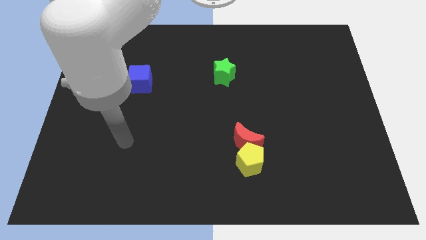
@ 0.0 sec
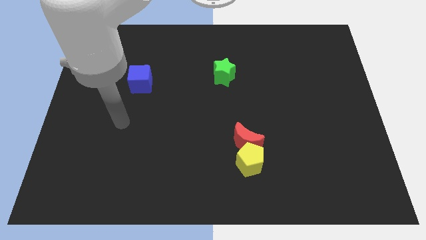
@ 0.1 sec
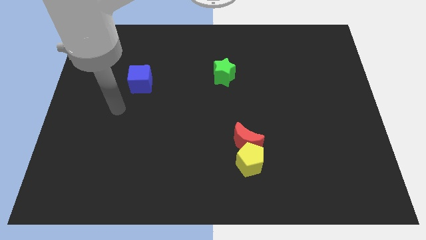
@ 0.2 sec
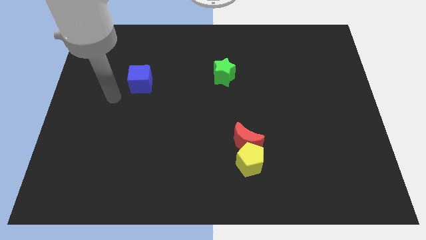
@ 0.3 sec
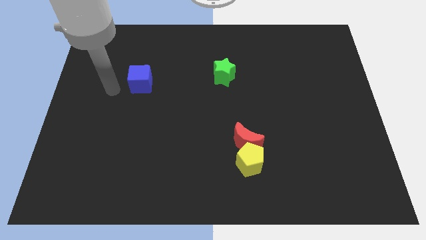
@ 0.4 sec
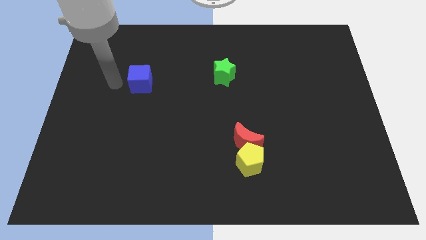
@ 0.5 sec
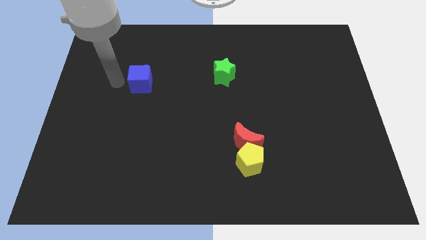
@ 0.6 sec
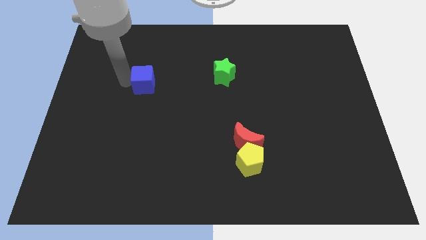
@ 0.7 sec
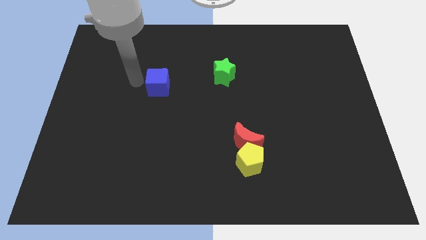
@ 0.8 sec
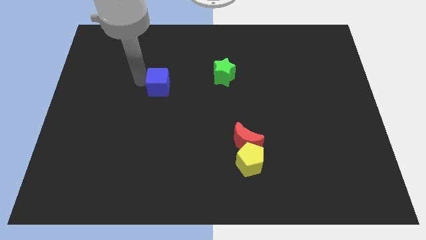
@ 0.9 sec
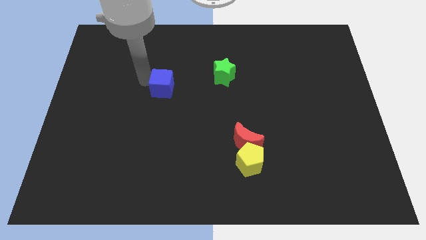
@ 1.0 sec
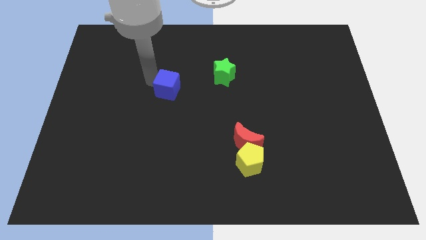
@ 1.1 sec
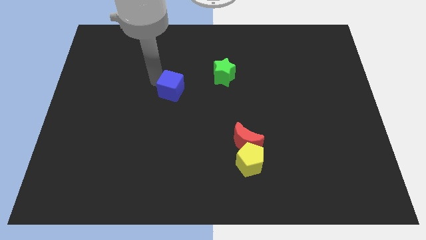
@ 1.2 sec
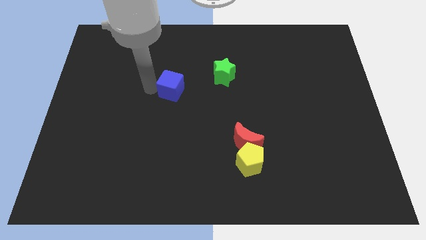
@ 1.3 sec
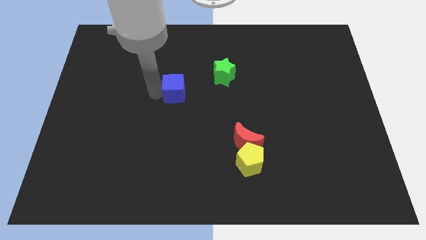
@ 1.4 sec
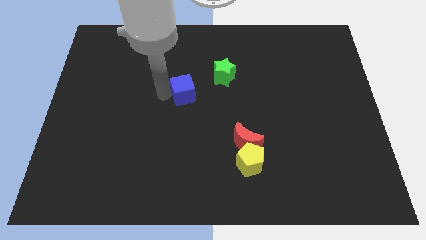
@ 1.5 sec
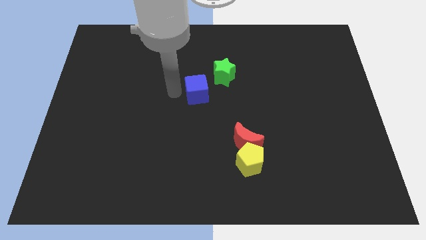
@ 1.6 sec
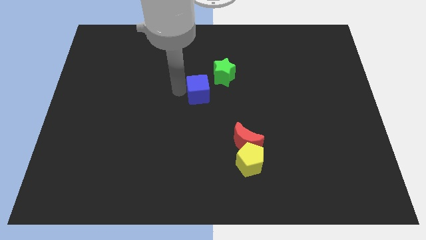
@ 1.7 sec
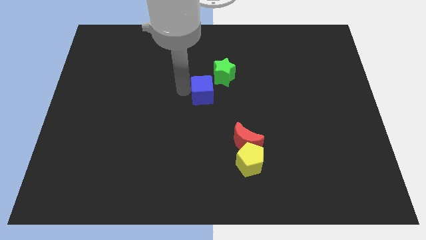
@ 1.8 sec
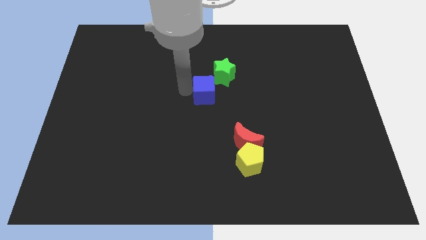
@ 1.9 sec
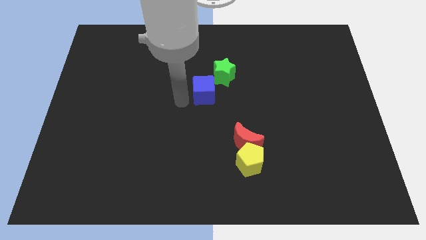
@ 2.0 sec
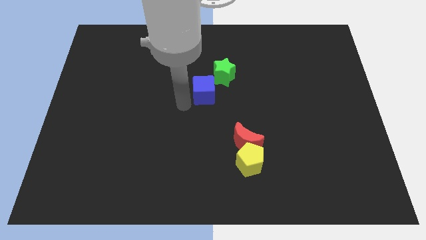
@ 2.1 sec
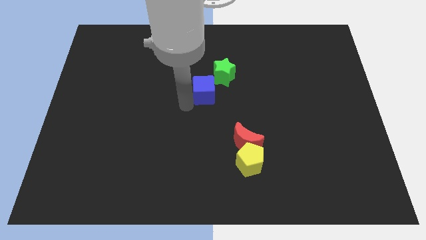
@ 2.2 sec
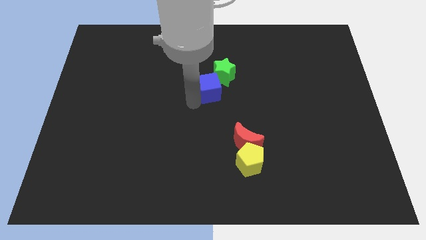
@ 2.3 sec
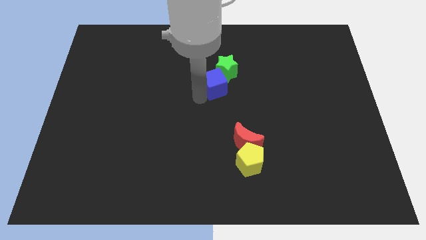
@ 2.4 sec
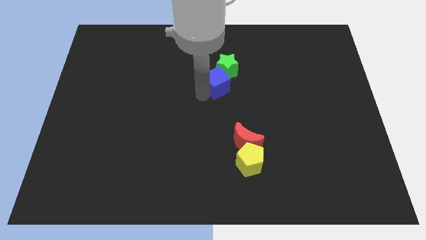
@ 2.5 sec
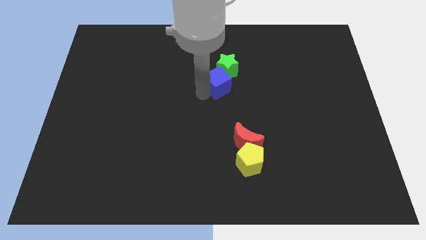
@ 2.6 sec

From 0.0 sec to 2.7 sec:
push the blue cube to the green star

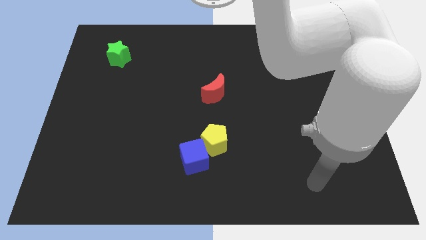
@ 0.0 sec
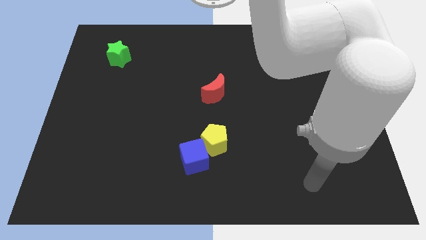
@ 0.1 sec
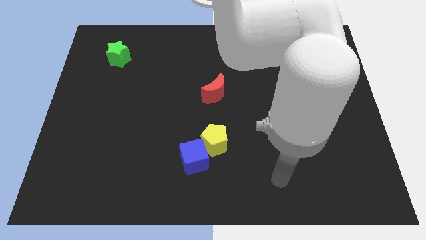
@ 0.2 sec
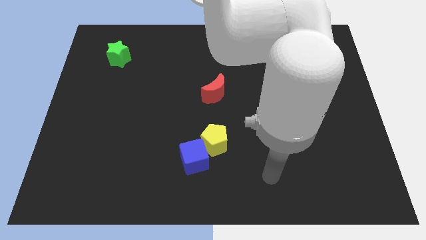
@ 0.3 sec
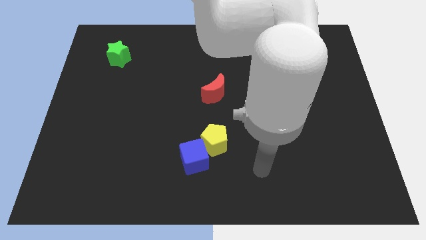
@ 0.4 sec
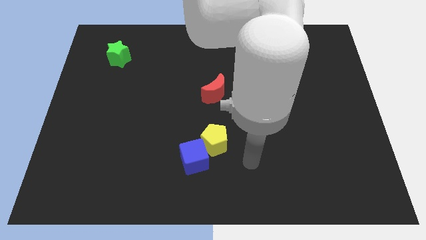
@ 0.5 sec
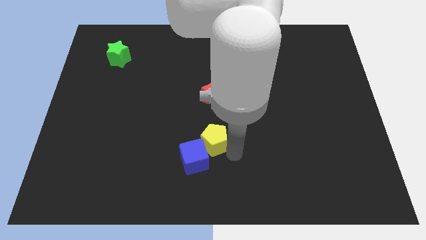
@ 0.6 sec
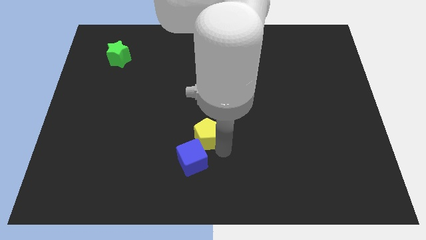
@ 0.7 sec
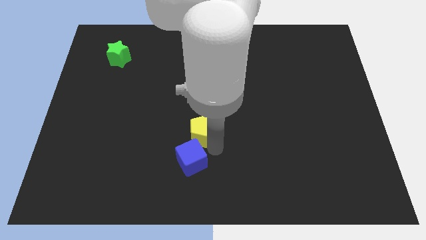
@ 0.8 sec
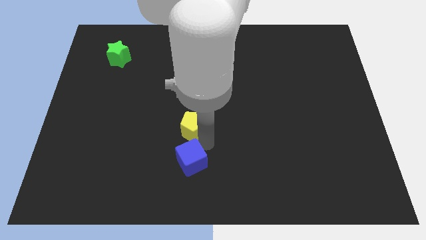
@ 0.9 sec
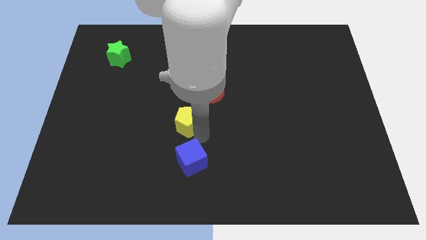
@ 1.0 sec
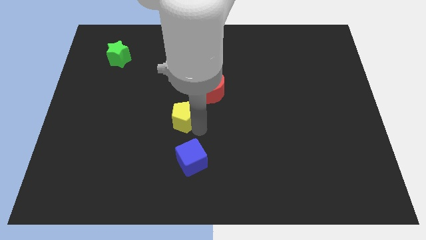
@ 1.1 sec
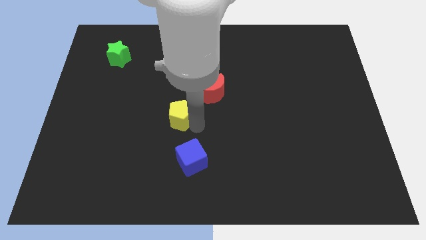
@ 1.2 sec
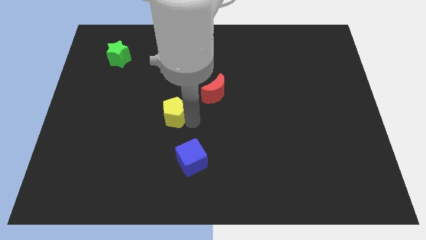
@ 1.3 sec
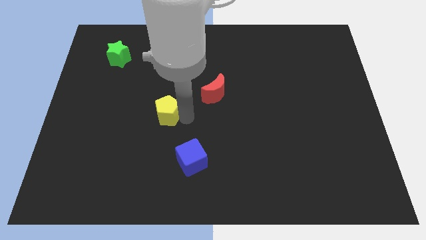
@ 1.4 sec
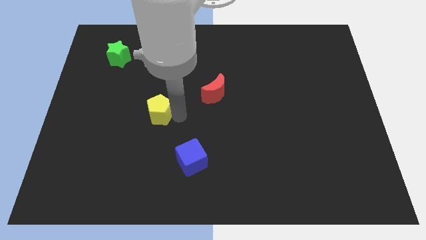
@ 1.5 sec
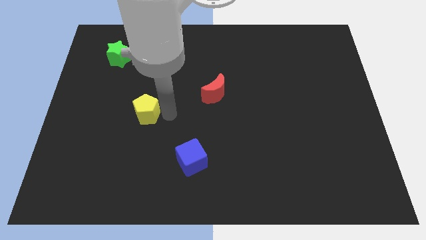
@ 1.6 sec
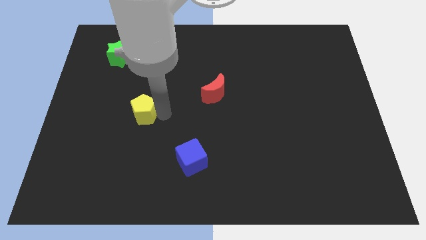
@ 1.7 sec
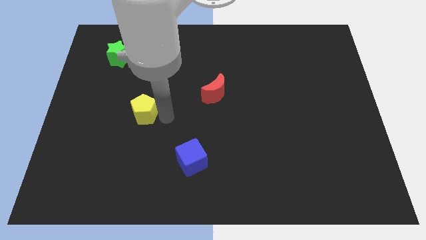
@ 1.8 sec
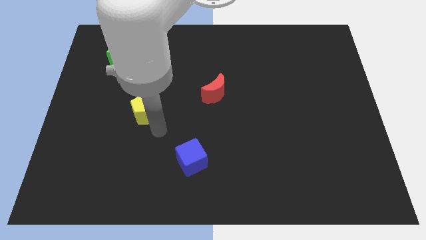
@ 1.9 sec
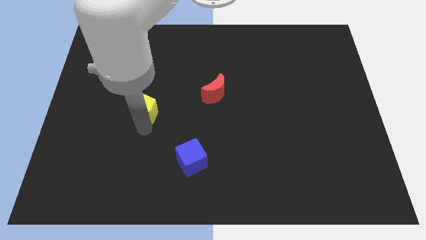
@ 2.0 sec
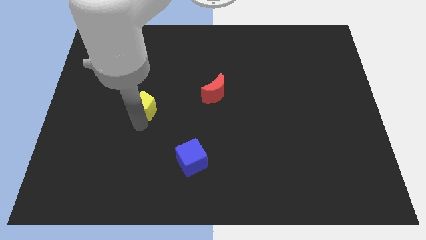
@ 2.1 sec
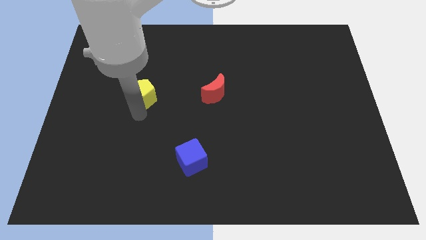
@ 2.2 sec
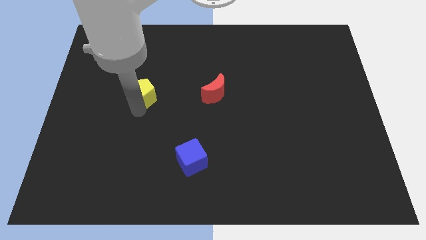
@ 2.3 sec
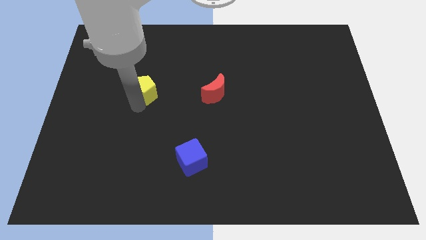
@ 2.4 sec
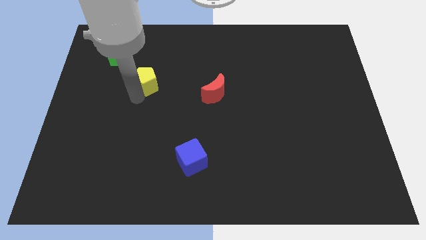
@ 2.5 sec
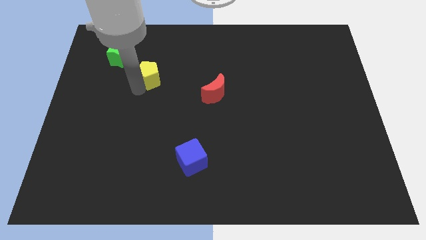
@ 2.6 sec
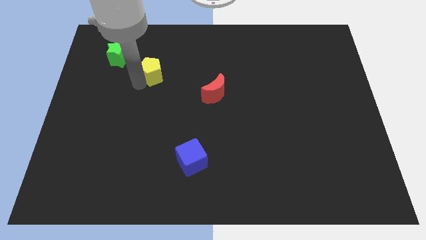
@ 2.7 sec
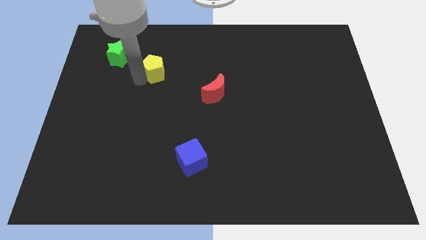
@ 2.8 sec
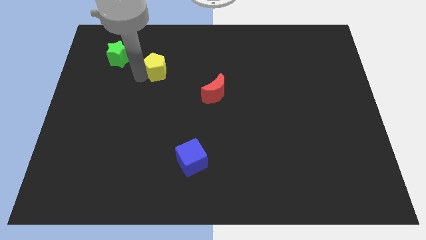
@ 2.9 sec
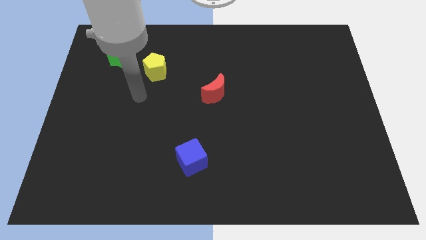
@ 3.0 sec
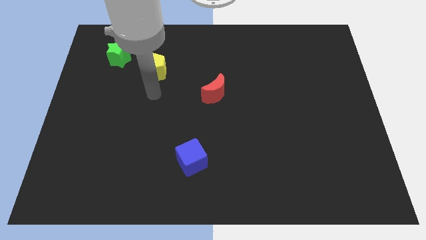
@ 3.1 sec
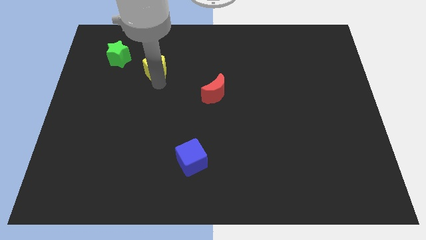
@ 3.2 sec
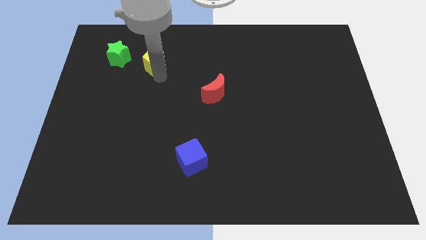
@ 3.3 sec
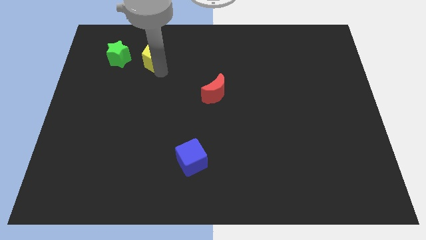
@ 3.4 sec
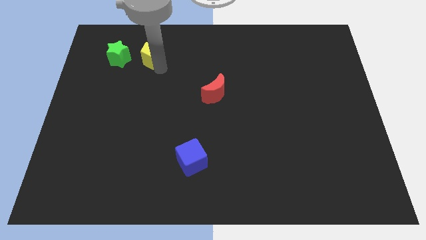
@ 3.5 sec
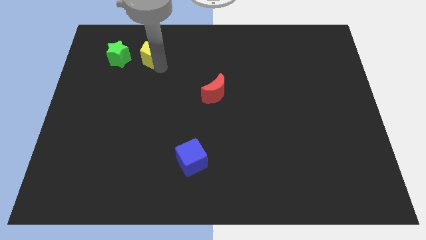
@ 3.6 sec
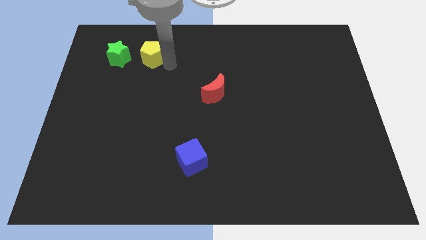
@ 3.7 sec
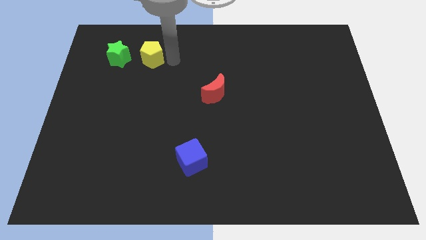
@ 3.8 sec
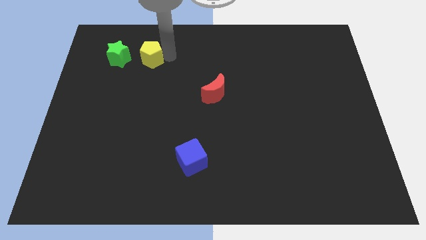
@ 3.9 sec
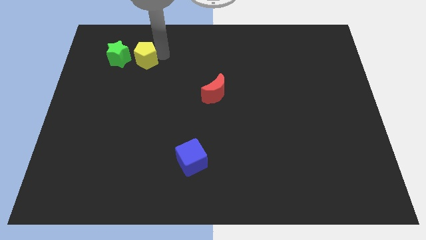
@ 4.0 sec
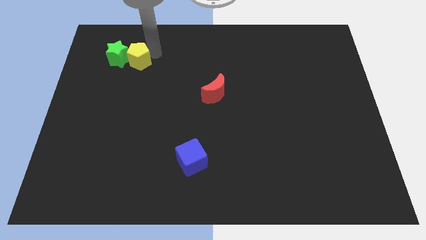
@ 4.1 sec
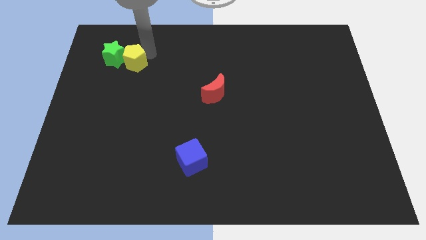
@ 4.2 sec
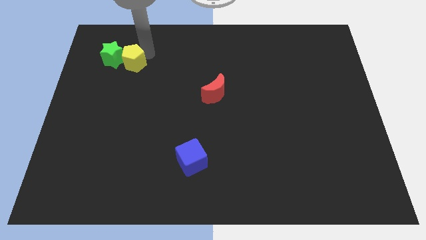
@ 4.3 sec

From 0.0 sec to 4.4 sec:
put the pentagon next to the green star

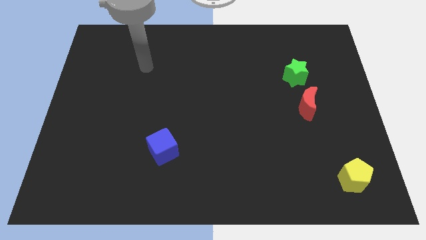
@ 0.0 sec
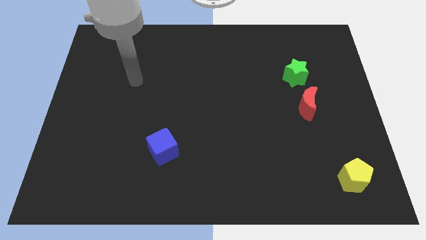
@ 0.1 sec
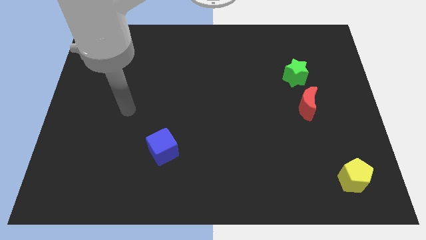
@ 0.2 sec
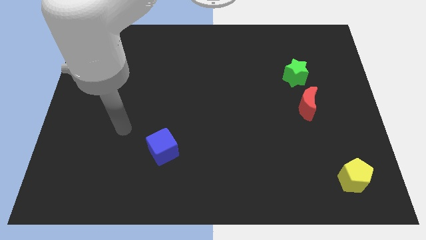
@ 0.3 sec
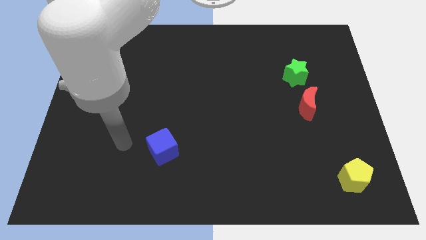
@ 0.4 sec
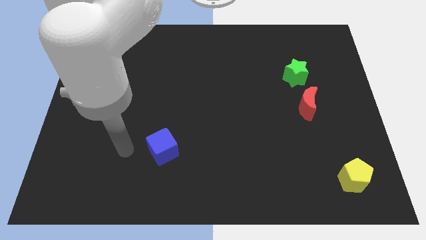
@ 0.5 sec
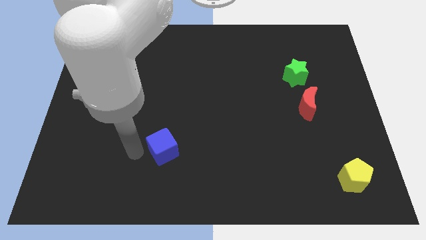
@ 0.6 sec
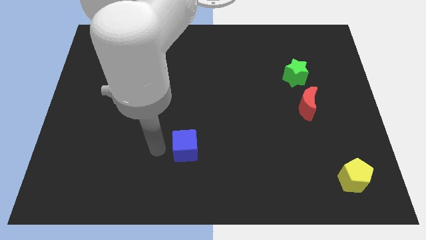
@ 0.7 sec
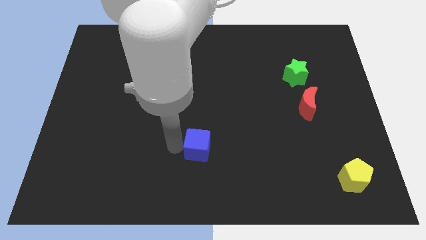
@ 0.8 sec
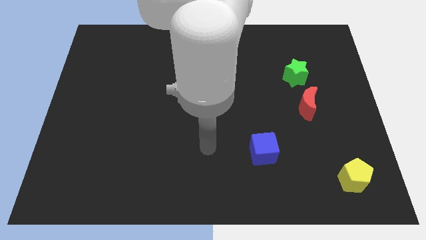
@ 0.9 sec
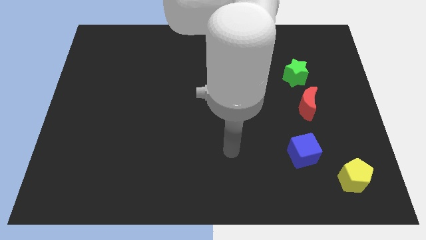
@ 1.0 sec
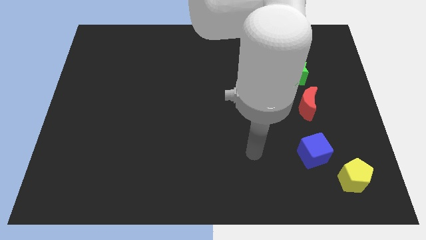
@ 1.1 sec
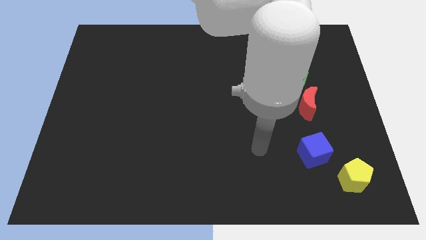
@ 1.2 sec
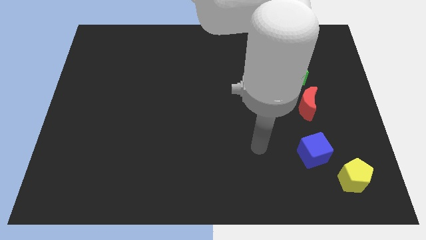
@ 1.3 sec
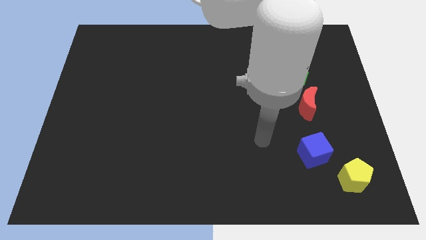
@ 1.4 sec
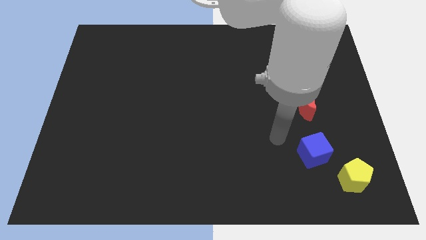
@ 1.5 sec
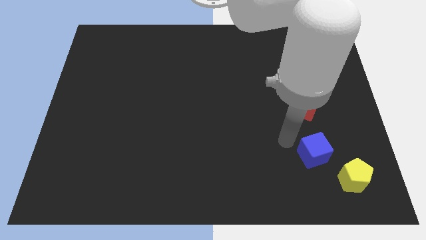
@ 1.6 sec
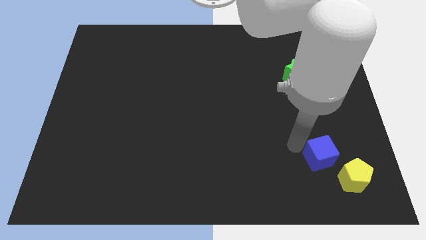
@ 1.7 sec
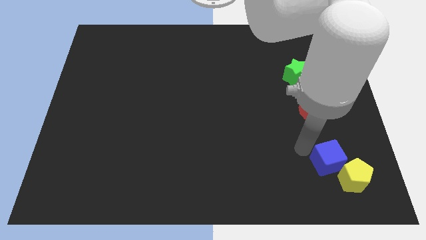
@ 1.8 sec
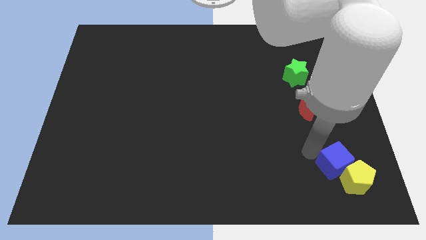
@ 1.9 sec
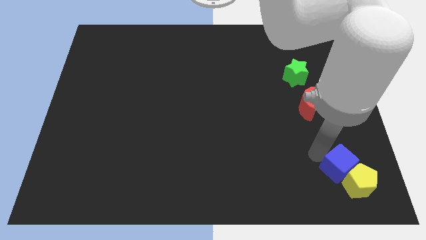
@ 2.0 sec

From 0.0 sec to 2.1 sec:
slide the blue block to the yellow block
